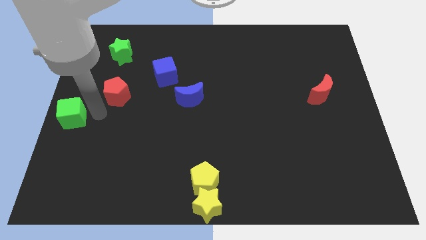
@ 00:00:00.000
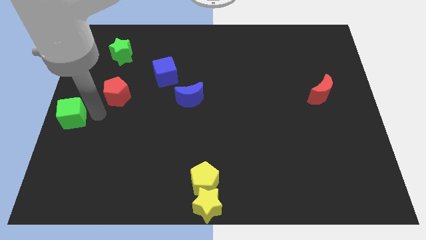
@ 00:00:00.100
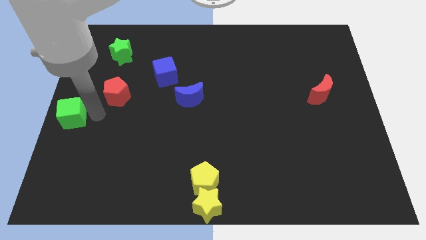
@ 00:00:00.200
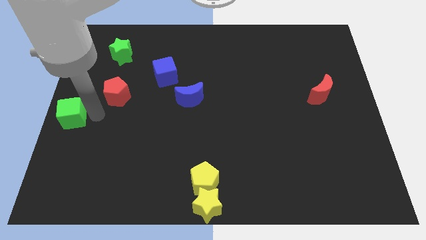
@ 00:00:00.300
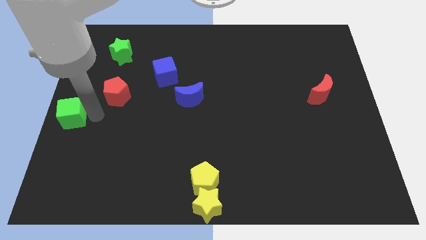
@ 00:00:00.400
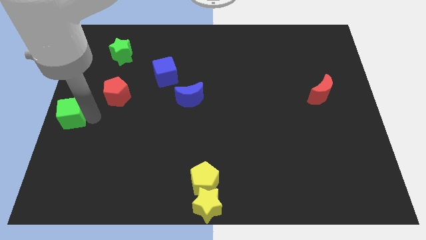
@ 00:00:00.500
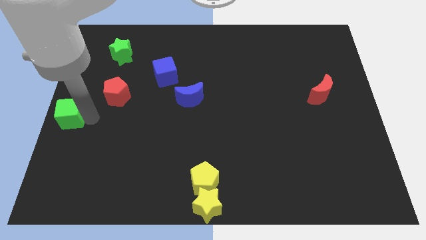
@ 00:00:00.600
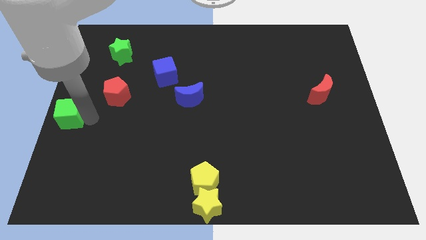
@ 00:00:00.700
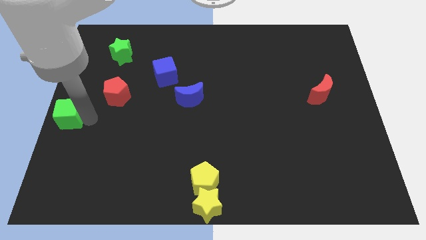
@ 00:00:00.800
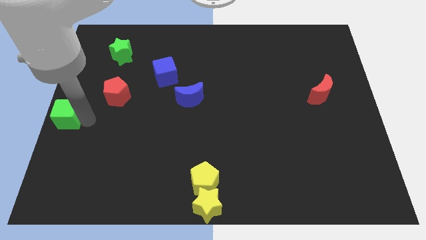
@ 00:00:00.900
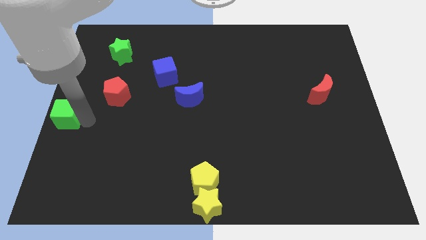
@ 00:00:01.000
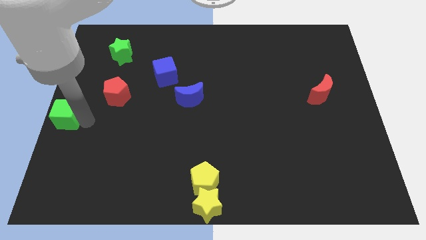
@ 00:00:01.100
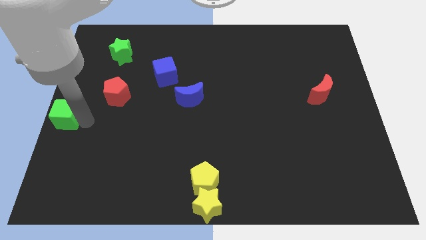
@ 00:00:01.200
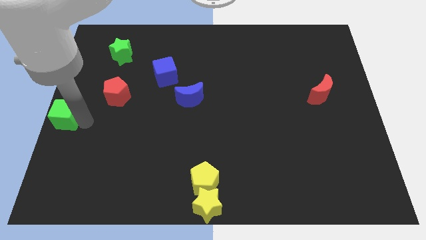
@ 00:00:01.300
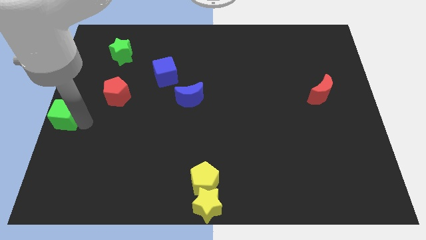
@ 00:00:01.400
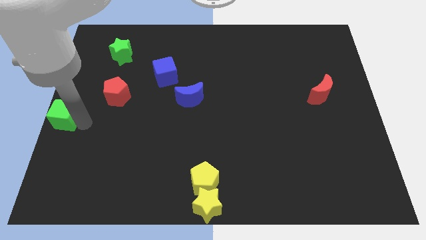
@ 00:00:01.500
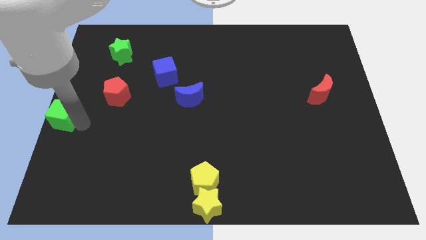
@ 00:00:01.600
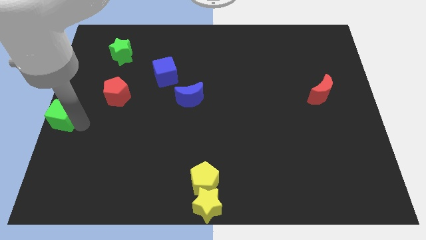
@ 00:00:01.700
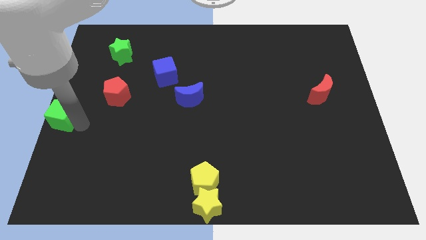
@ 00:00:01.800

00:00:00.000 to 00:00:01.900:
move green cube to the left center of the board

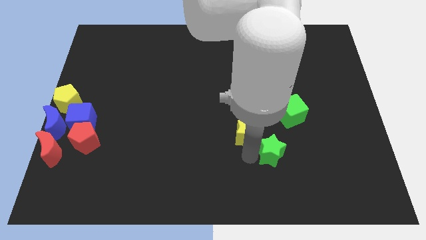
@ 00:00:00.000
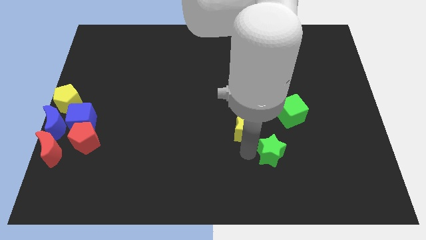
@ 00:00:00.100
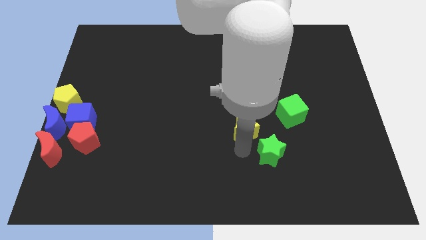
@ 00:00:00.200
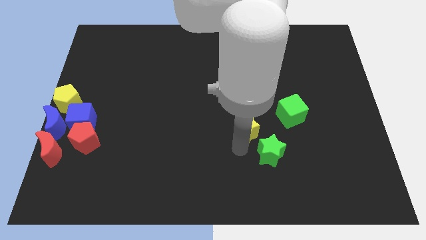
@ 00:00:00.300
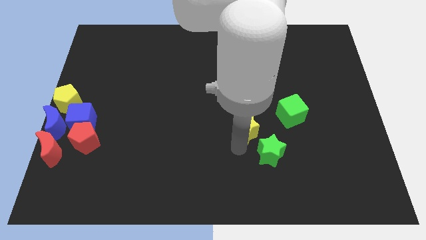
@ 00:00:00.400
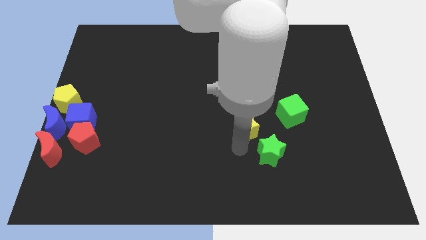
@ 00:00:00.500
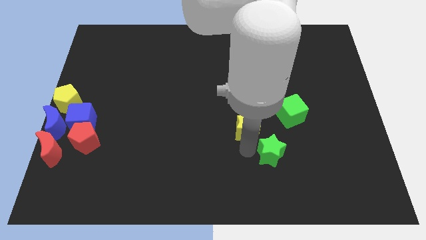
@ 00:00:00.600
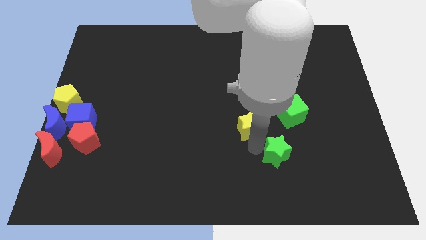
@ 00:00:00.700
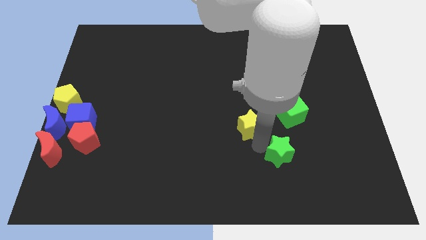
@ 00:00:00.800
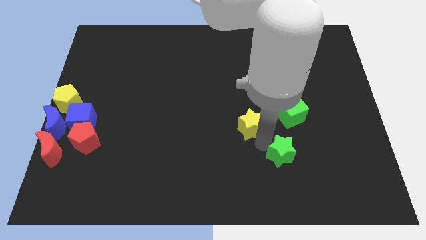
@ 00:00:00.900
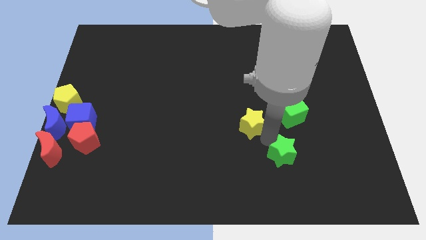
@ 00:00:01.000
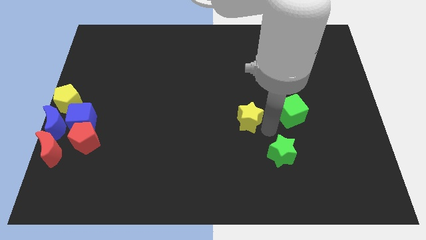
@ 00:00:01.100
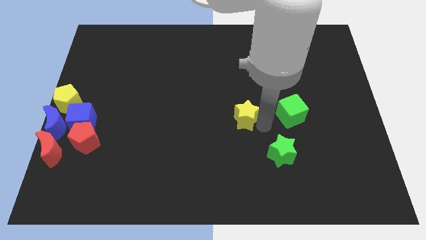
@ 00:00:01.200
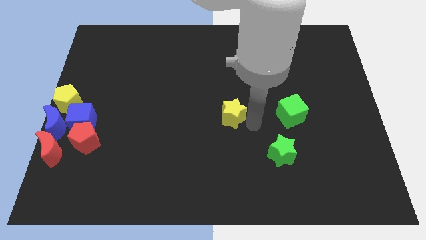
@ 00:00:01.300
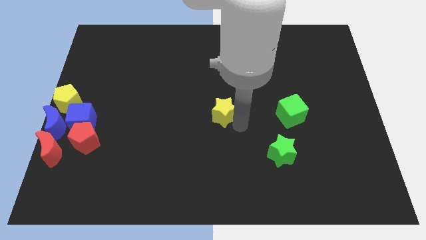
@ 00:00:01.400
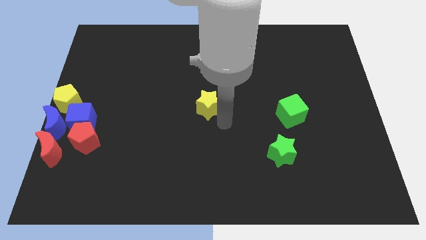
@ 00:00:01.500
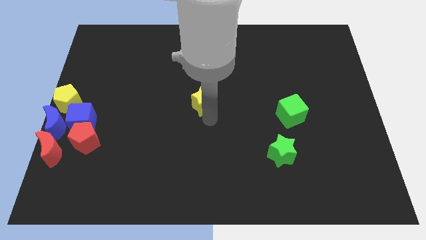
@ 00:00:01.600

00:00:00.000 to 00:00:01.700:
place the yellow star at the center of the board

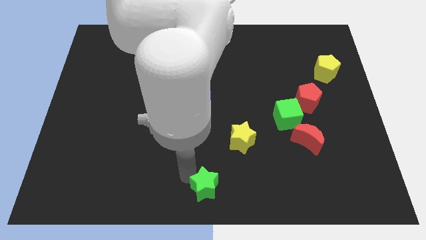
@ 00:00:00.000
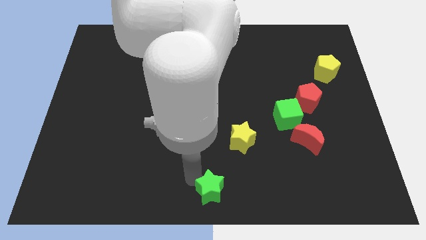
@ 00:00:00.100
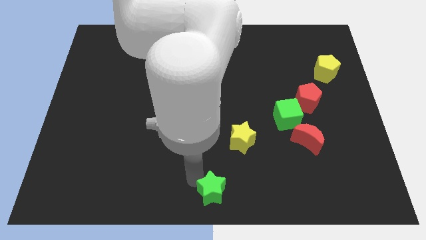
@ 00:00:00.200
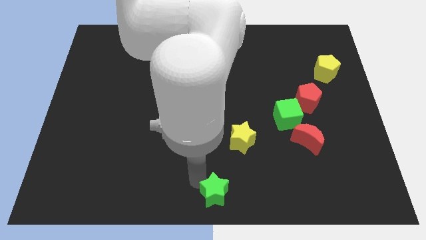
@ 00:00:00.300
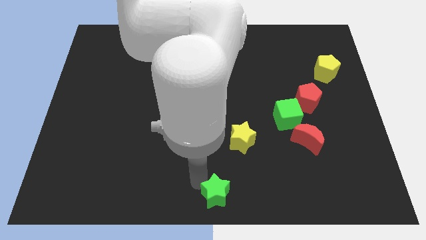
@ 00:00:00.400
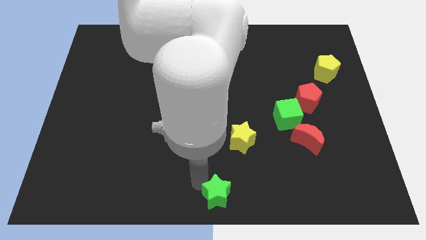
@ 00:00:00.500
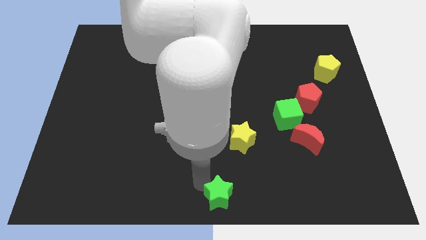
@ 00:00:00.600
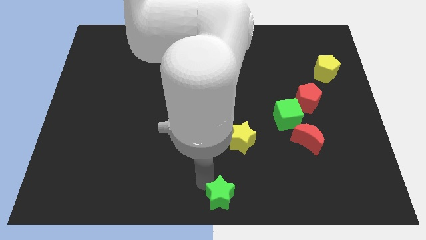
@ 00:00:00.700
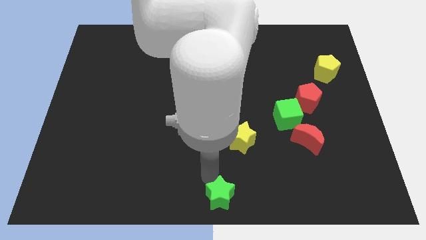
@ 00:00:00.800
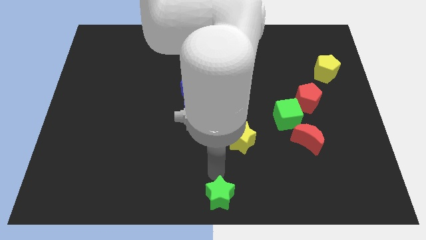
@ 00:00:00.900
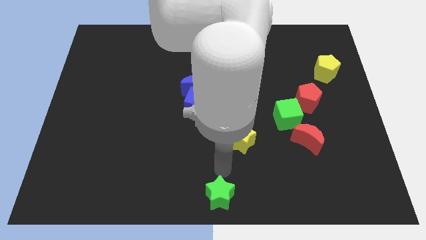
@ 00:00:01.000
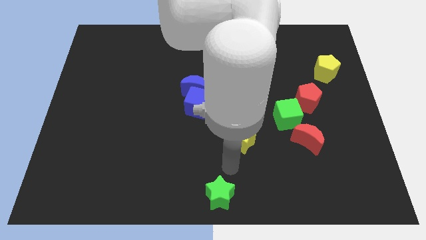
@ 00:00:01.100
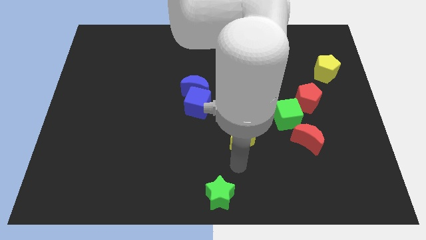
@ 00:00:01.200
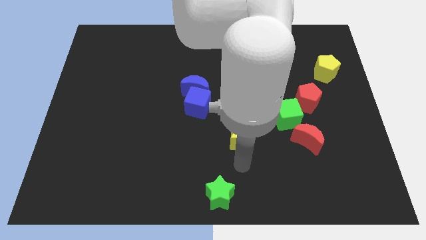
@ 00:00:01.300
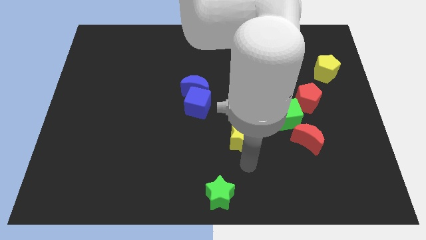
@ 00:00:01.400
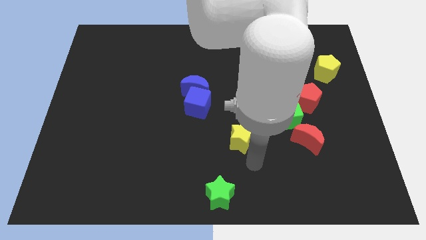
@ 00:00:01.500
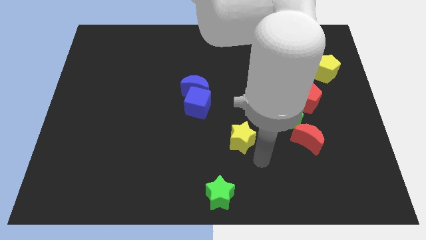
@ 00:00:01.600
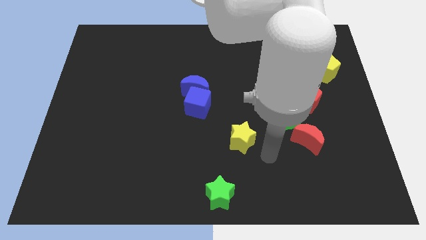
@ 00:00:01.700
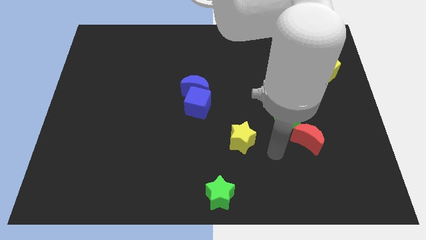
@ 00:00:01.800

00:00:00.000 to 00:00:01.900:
move the green star to the bottom center

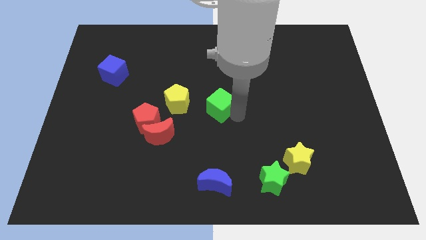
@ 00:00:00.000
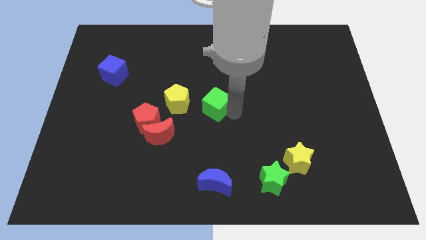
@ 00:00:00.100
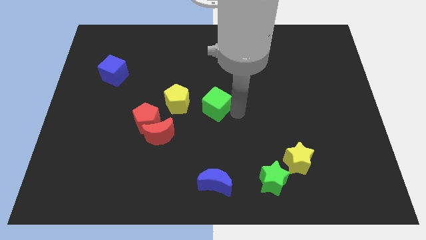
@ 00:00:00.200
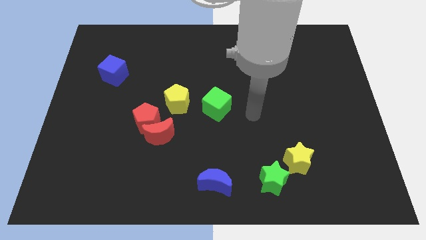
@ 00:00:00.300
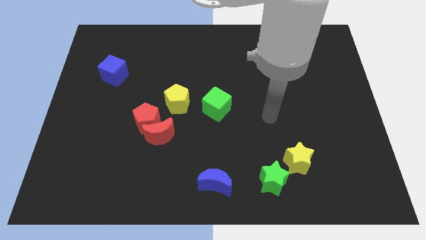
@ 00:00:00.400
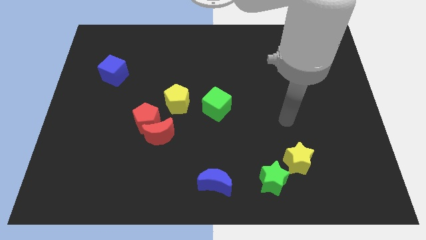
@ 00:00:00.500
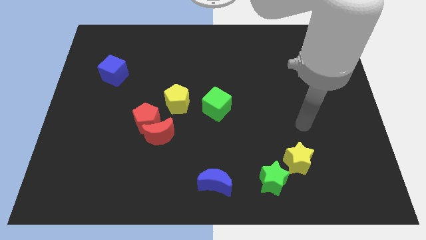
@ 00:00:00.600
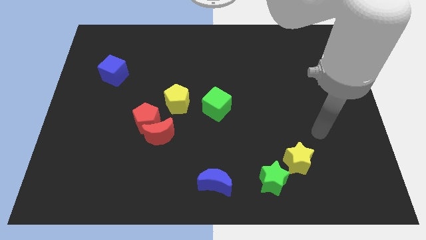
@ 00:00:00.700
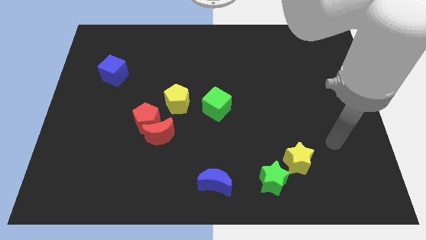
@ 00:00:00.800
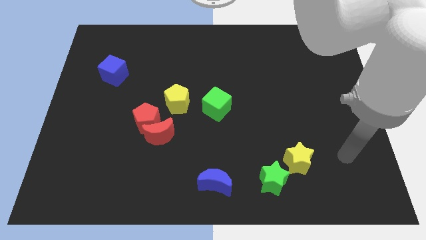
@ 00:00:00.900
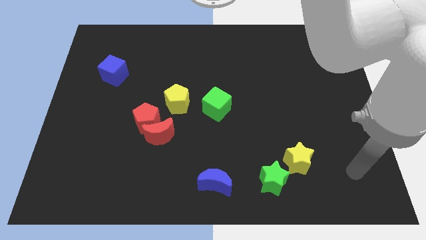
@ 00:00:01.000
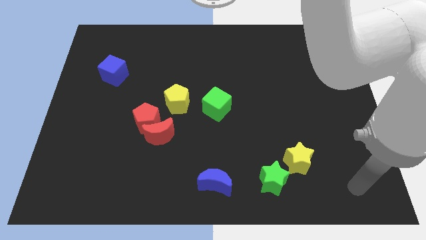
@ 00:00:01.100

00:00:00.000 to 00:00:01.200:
move your arm away from the green cube

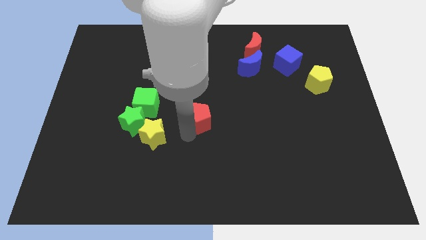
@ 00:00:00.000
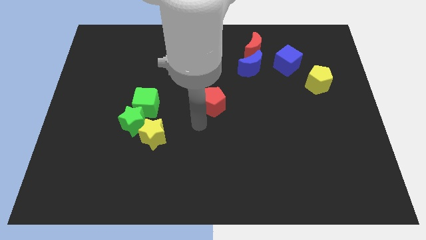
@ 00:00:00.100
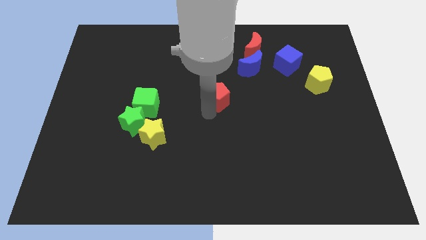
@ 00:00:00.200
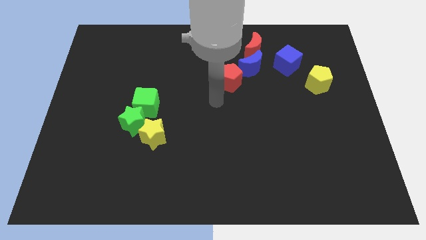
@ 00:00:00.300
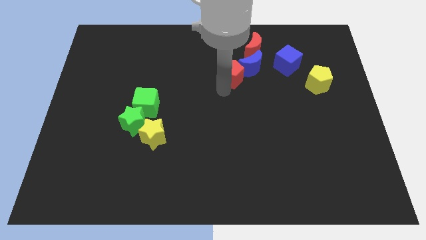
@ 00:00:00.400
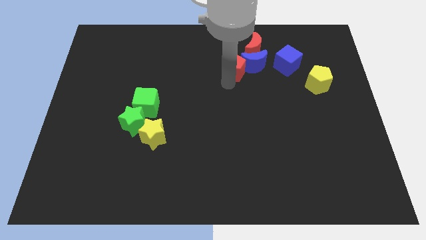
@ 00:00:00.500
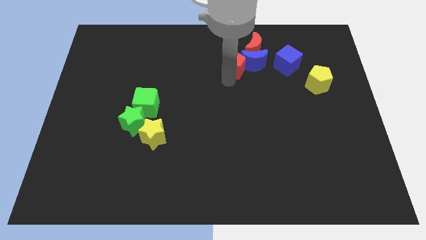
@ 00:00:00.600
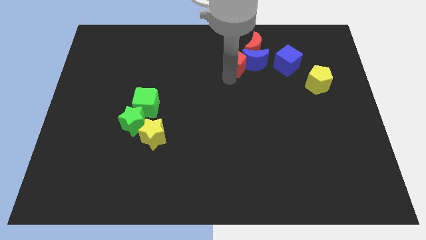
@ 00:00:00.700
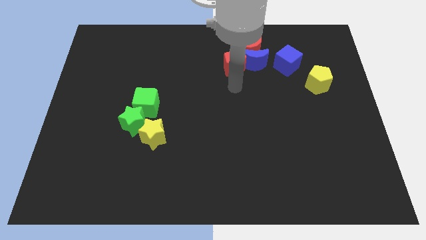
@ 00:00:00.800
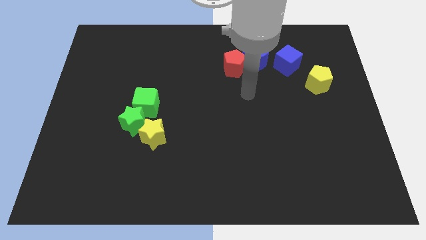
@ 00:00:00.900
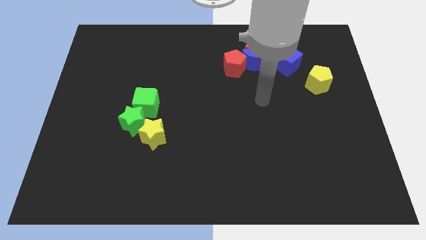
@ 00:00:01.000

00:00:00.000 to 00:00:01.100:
push the red pentagon into blue moon

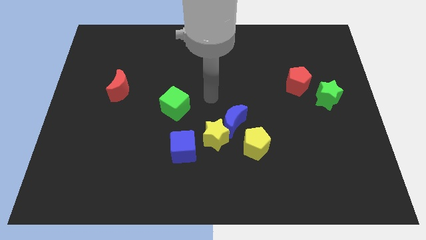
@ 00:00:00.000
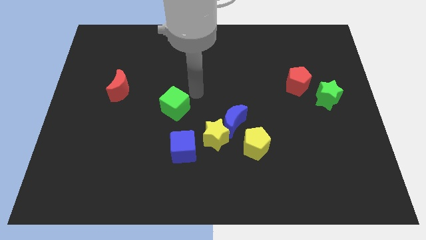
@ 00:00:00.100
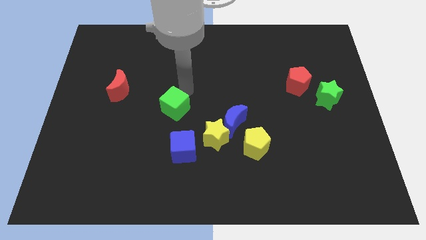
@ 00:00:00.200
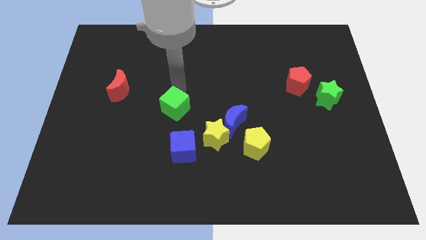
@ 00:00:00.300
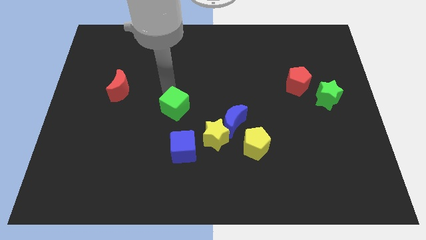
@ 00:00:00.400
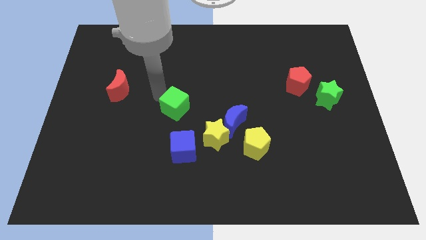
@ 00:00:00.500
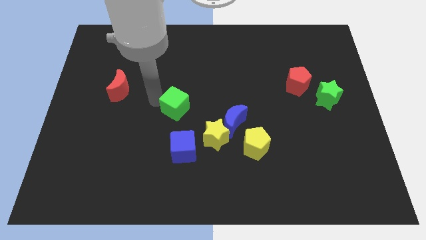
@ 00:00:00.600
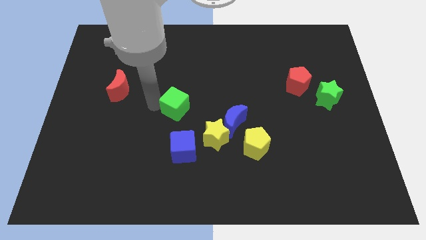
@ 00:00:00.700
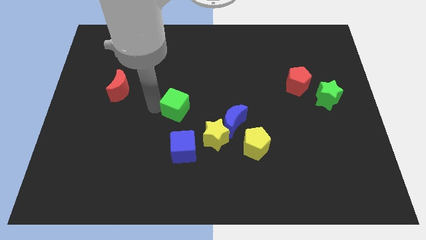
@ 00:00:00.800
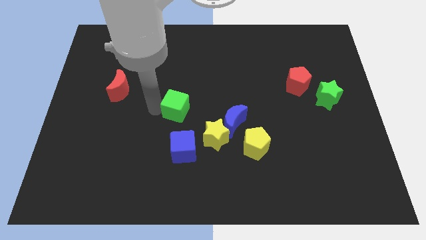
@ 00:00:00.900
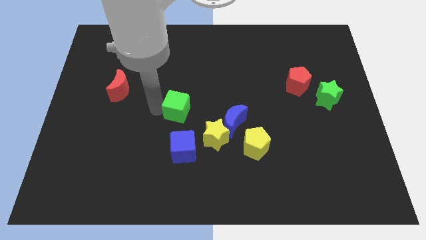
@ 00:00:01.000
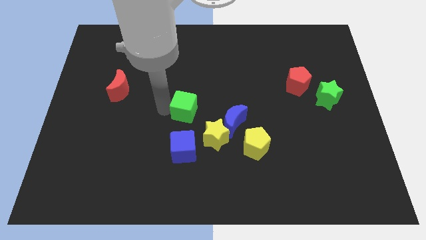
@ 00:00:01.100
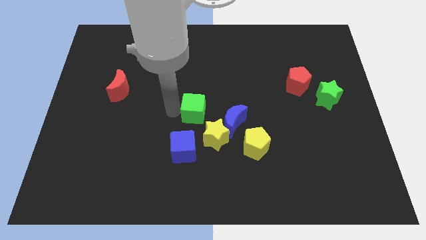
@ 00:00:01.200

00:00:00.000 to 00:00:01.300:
push the green cube to the top of blue cube
